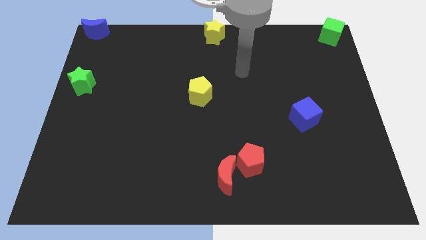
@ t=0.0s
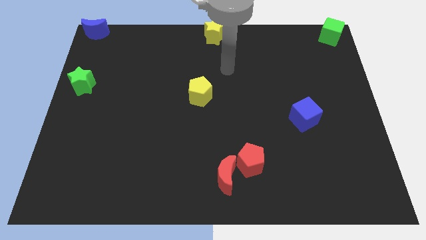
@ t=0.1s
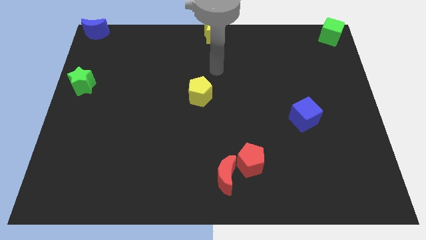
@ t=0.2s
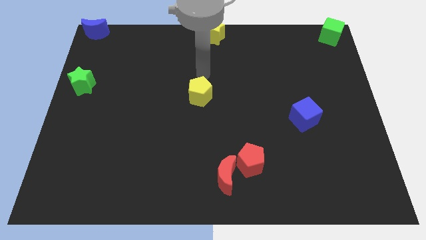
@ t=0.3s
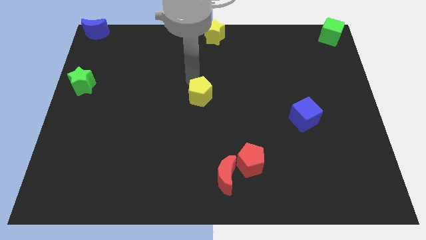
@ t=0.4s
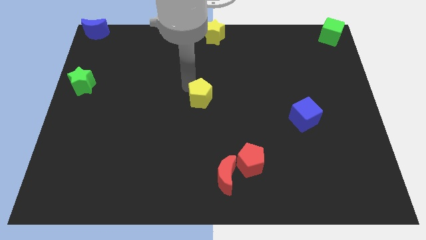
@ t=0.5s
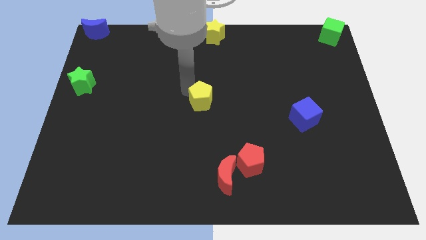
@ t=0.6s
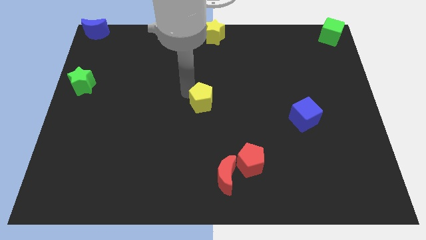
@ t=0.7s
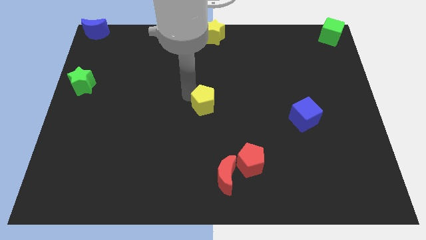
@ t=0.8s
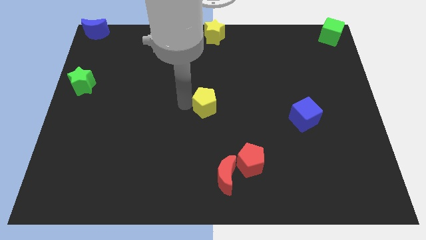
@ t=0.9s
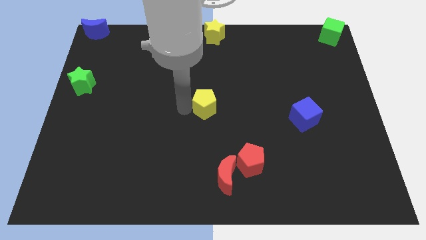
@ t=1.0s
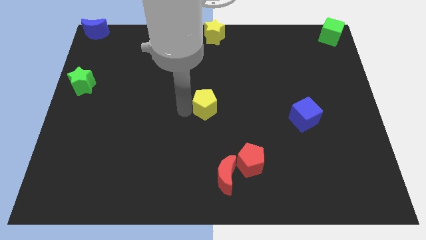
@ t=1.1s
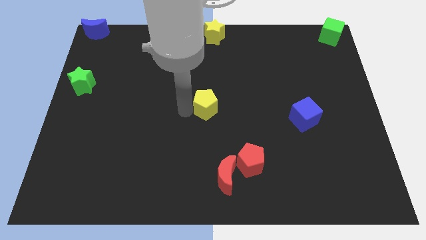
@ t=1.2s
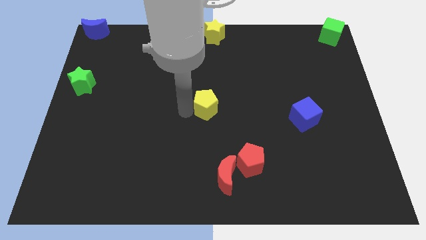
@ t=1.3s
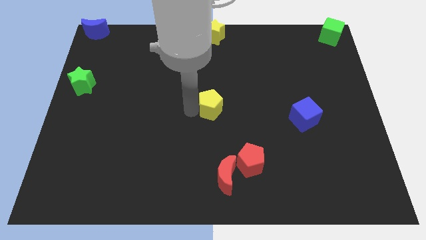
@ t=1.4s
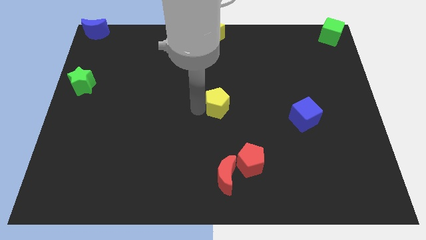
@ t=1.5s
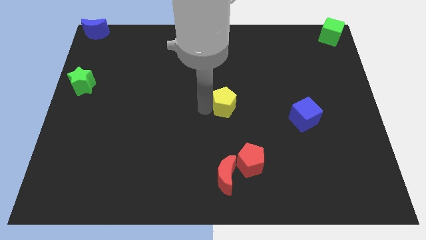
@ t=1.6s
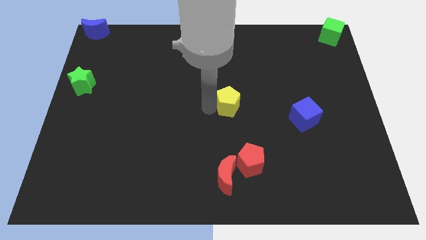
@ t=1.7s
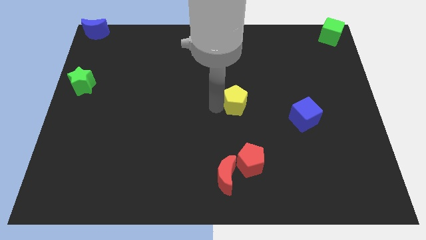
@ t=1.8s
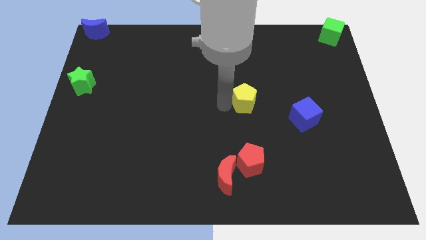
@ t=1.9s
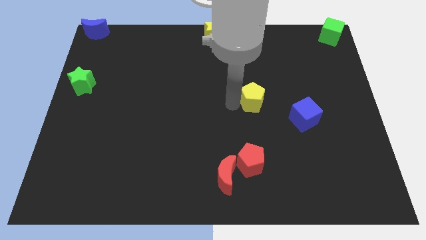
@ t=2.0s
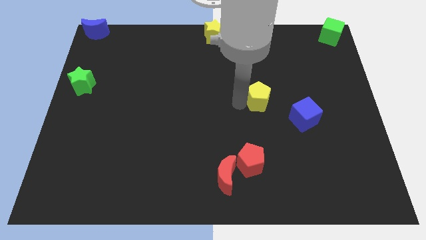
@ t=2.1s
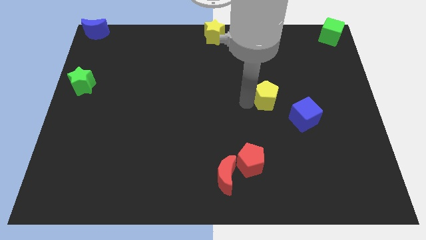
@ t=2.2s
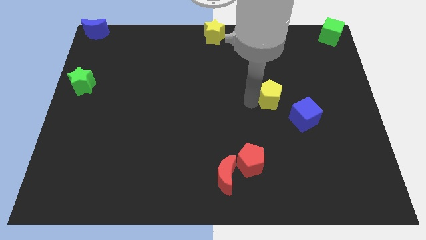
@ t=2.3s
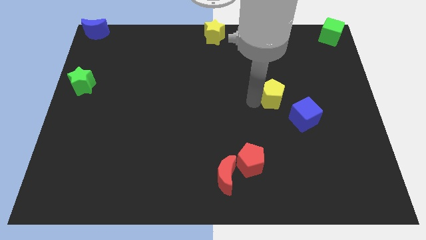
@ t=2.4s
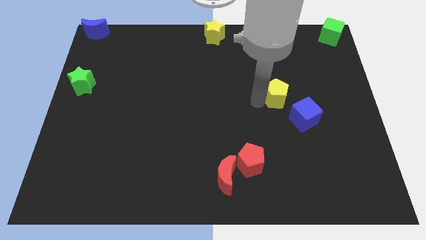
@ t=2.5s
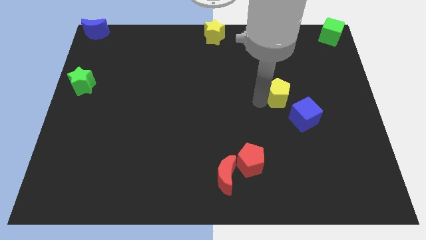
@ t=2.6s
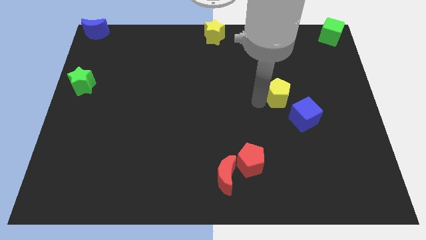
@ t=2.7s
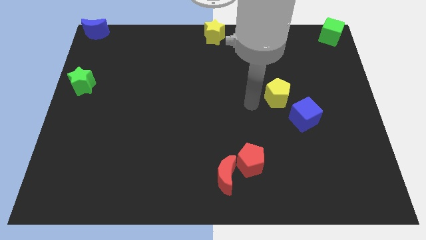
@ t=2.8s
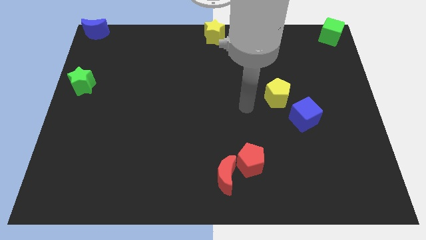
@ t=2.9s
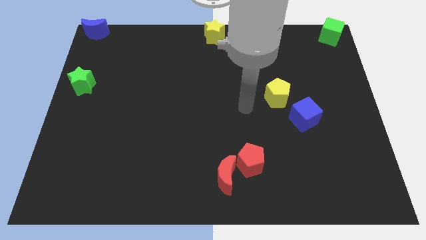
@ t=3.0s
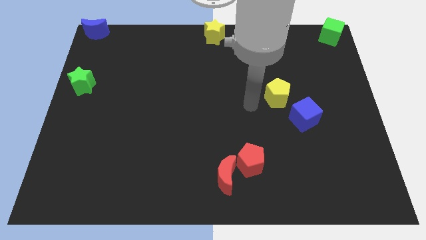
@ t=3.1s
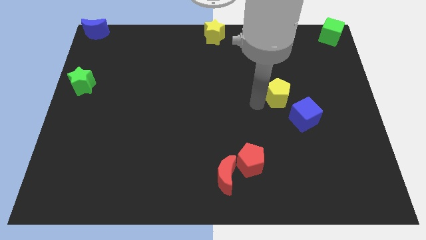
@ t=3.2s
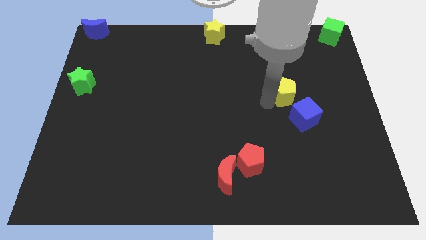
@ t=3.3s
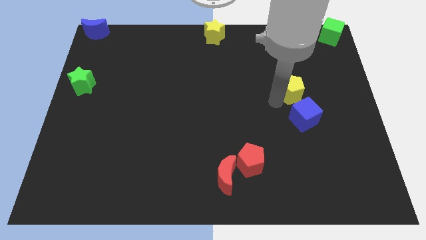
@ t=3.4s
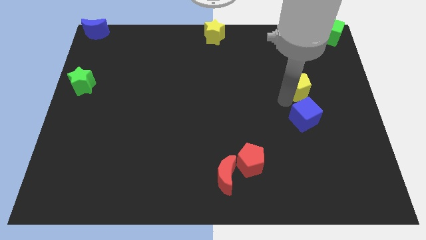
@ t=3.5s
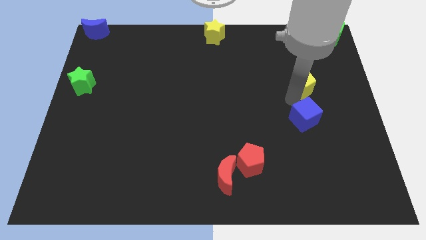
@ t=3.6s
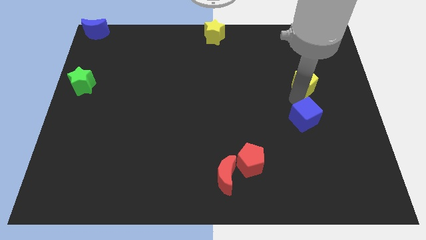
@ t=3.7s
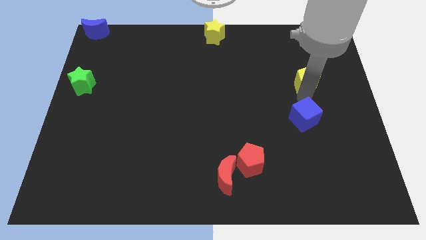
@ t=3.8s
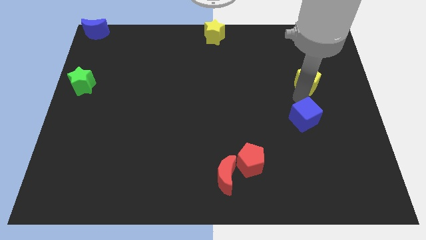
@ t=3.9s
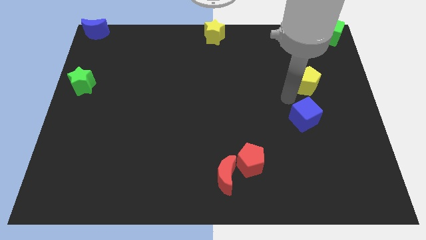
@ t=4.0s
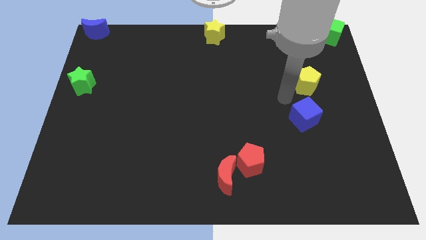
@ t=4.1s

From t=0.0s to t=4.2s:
place the yellow pentagon above the blue cube

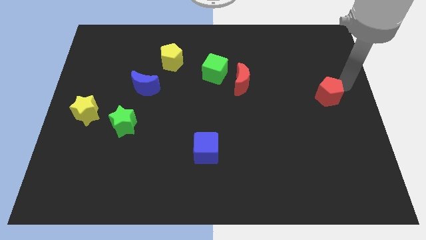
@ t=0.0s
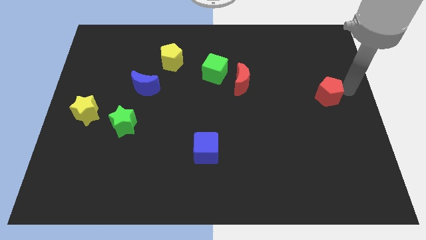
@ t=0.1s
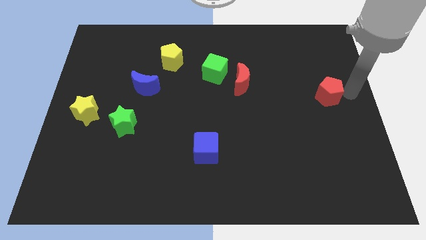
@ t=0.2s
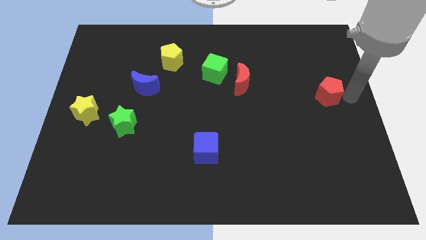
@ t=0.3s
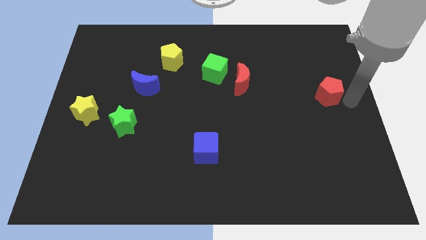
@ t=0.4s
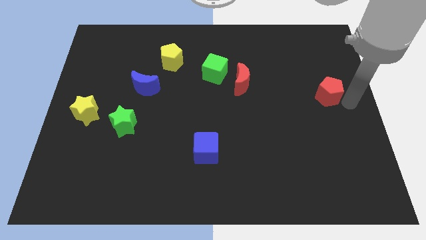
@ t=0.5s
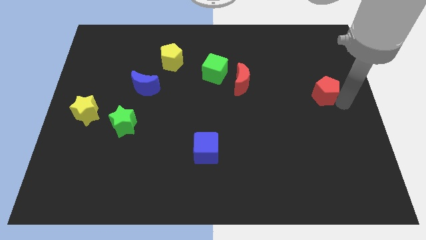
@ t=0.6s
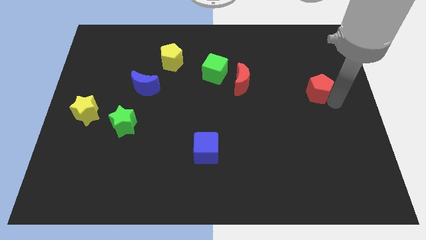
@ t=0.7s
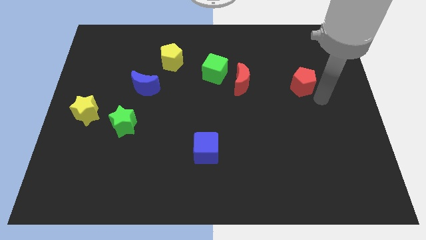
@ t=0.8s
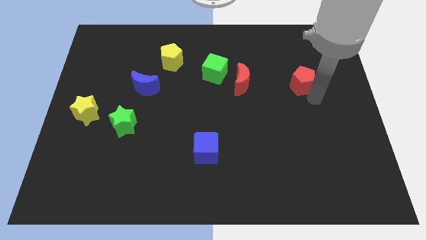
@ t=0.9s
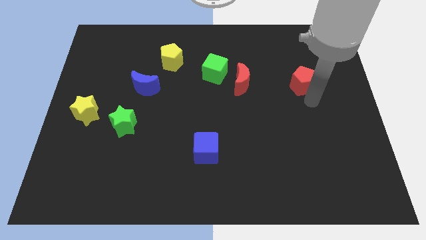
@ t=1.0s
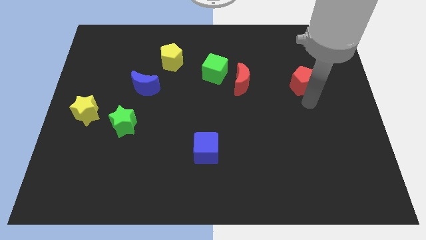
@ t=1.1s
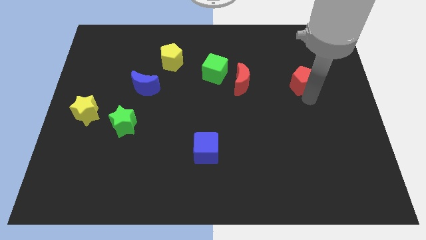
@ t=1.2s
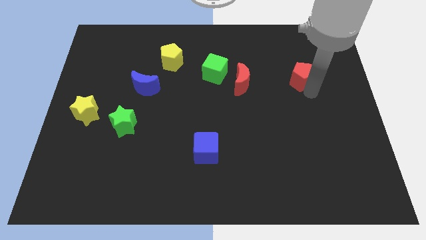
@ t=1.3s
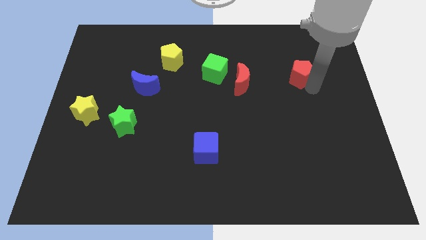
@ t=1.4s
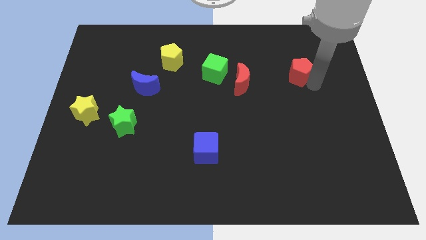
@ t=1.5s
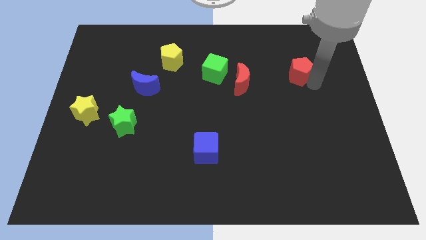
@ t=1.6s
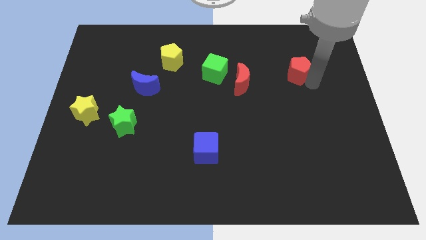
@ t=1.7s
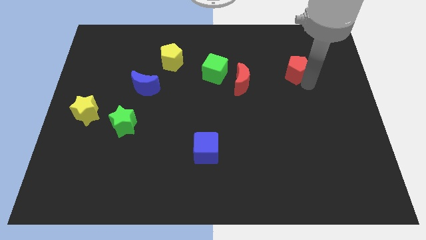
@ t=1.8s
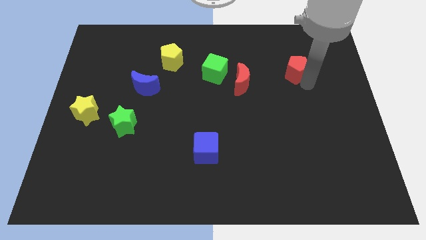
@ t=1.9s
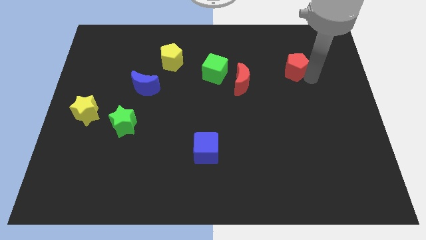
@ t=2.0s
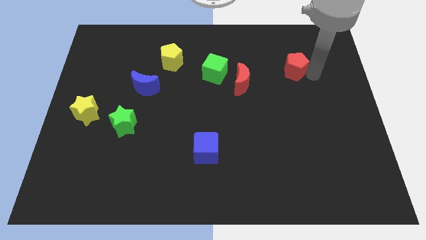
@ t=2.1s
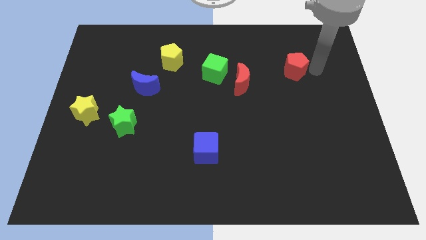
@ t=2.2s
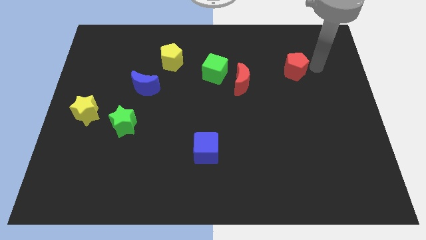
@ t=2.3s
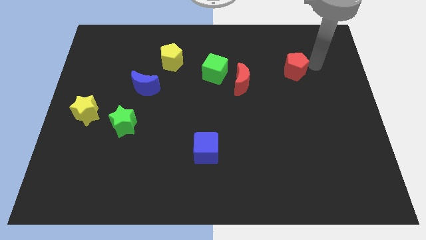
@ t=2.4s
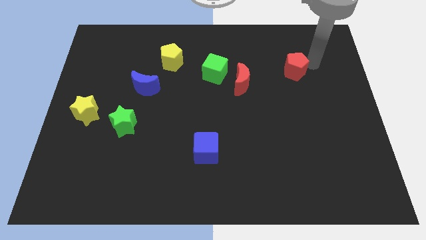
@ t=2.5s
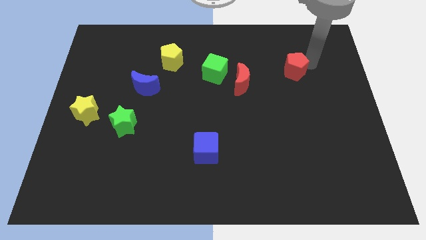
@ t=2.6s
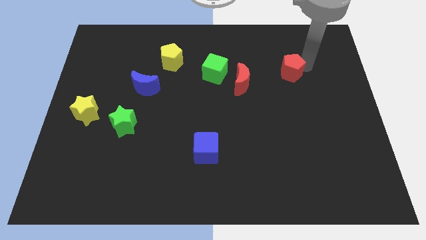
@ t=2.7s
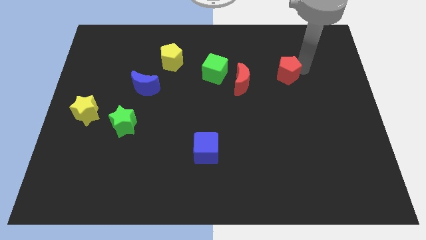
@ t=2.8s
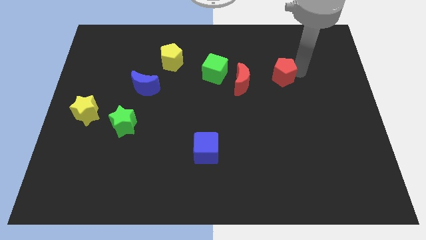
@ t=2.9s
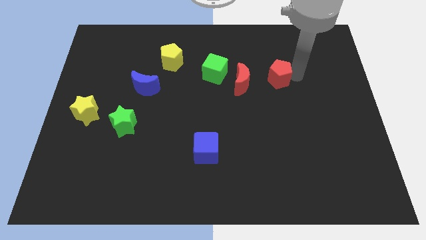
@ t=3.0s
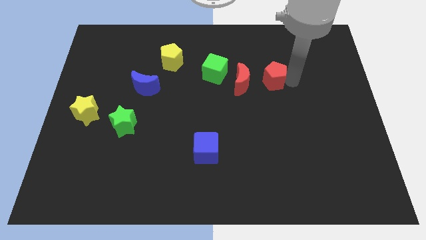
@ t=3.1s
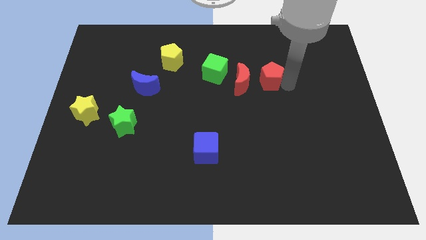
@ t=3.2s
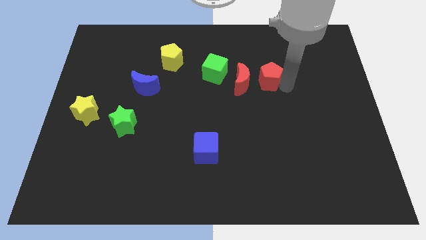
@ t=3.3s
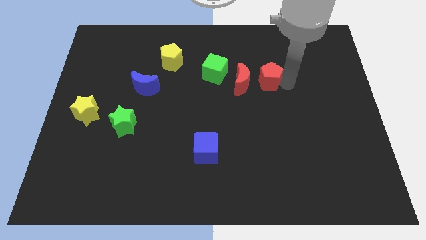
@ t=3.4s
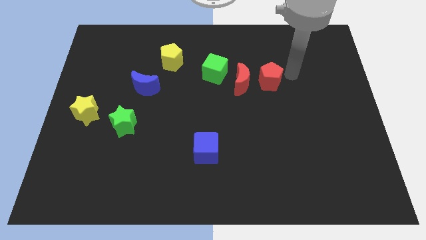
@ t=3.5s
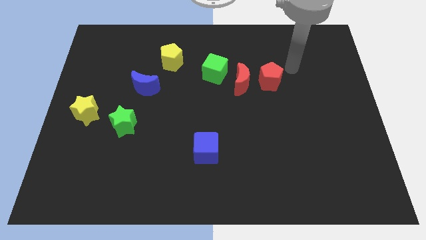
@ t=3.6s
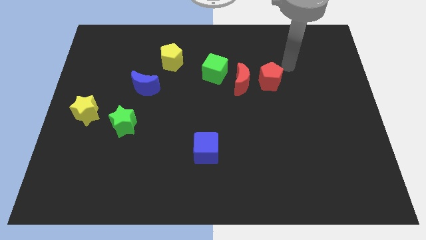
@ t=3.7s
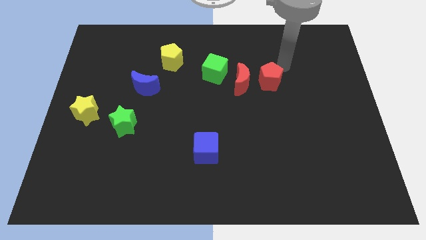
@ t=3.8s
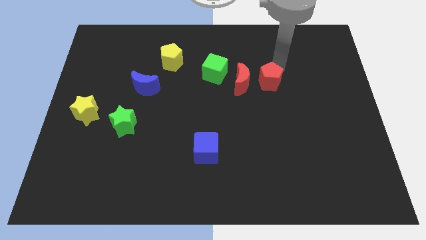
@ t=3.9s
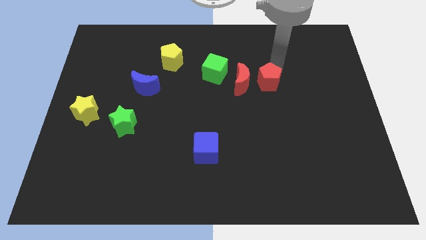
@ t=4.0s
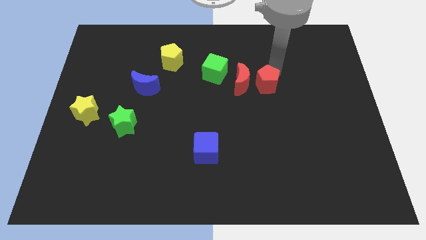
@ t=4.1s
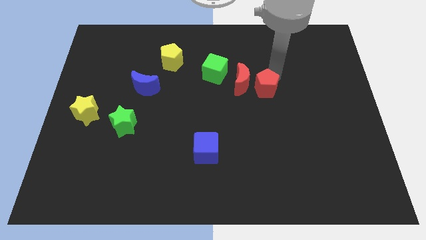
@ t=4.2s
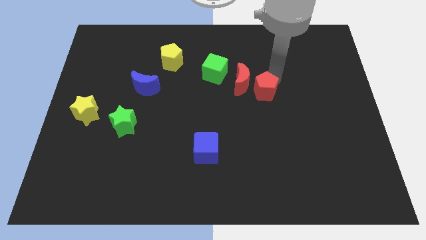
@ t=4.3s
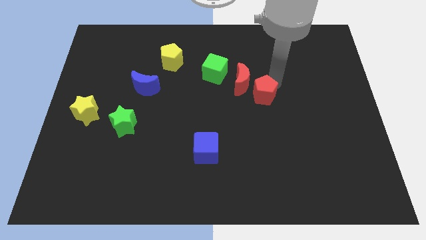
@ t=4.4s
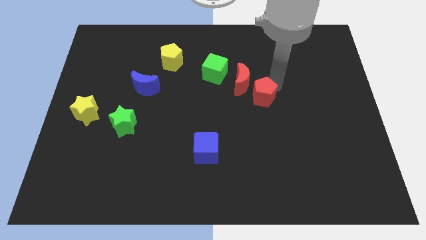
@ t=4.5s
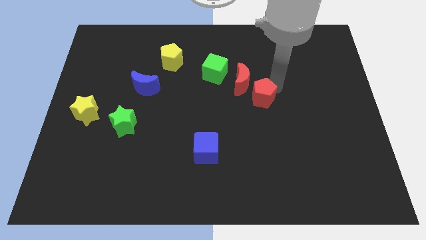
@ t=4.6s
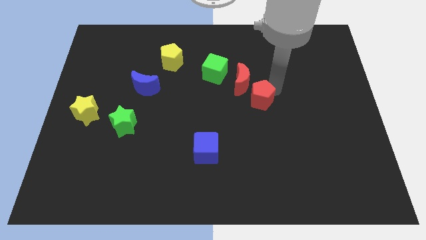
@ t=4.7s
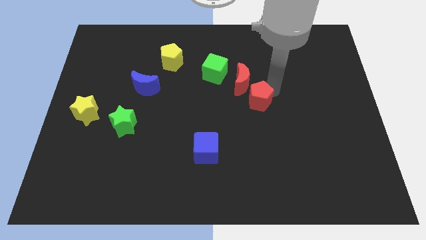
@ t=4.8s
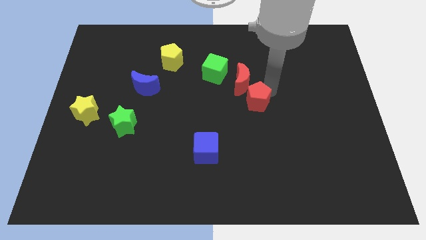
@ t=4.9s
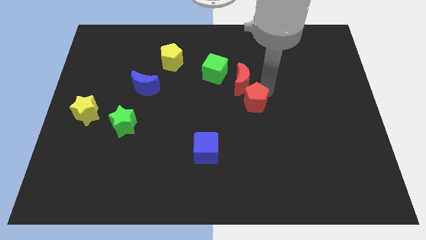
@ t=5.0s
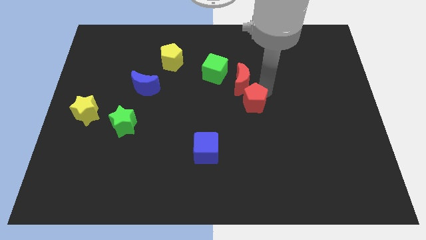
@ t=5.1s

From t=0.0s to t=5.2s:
push red pentagon to the bottom right of red moon
